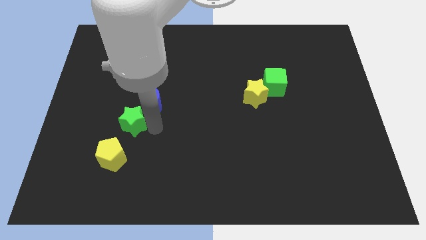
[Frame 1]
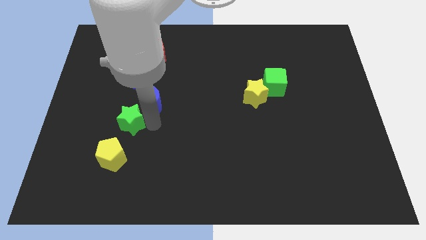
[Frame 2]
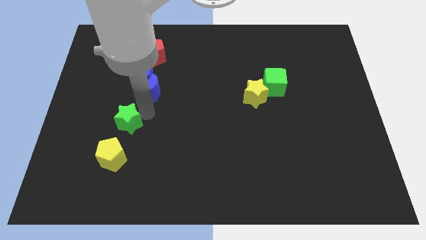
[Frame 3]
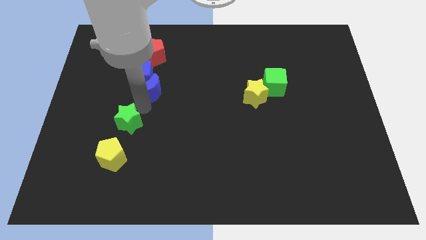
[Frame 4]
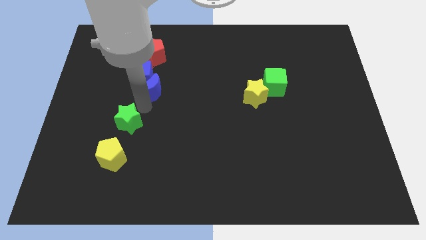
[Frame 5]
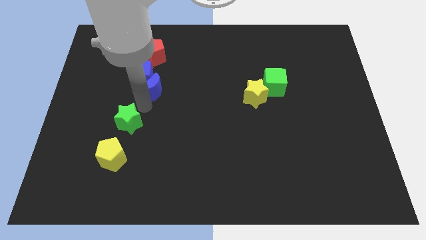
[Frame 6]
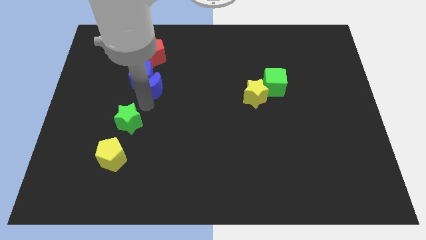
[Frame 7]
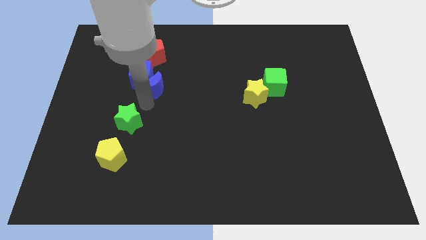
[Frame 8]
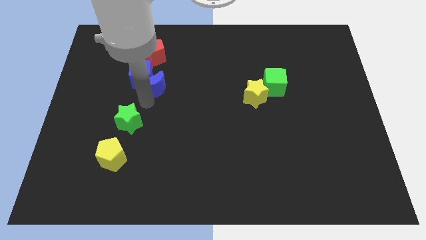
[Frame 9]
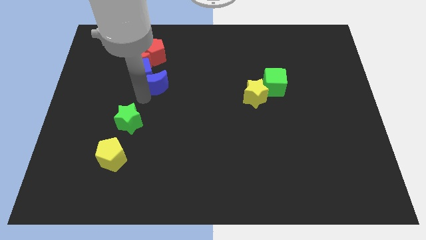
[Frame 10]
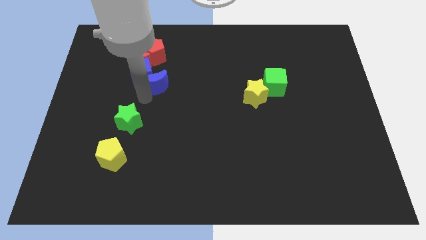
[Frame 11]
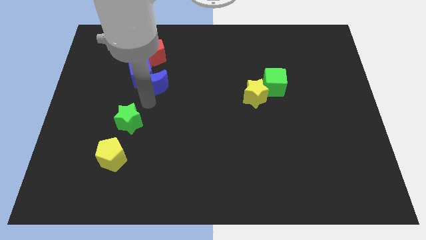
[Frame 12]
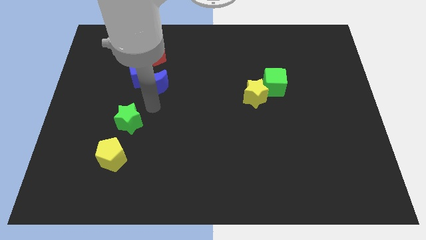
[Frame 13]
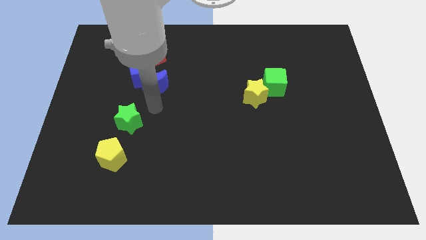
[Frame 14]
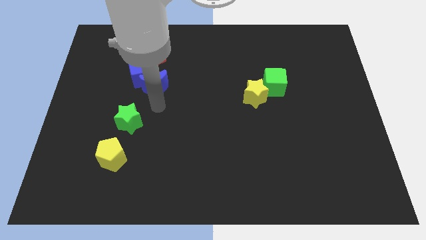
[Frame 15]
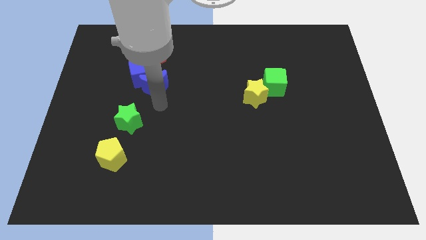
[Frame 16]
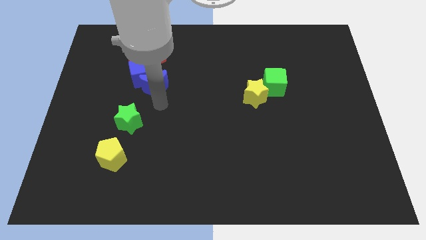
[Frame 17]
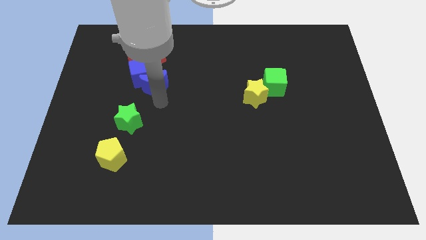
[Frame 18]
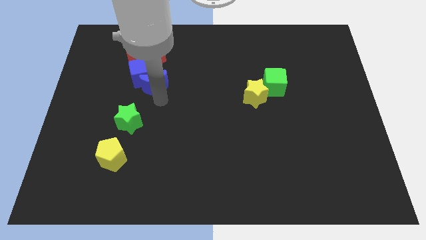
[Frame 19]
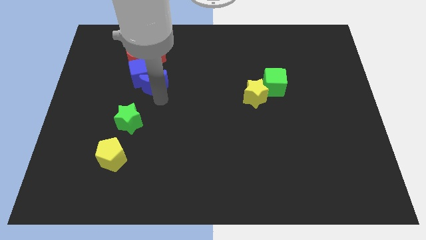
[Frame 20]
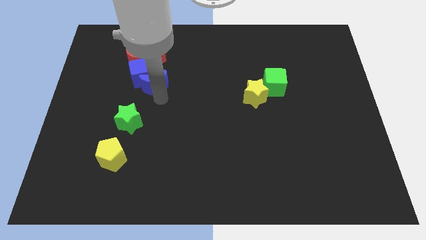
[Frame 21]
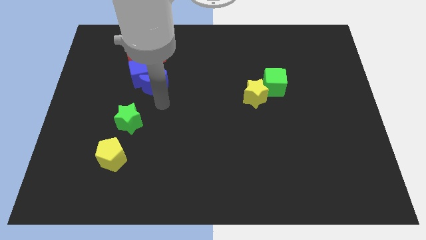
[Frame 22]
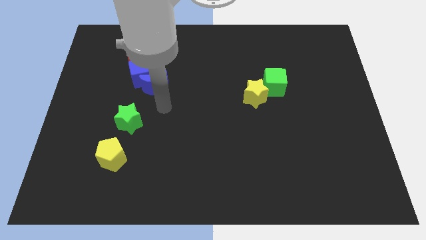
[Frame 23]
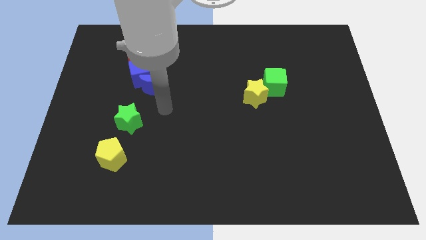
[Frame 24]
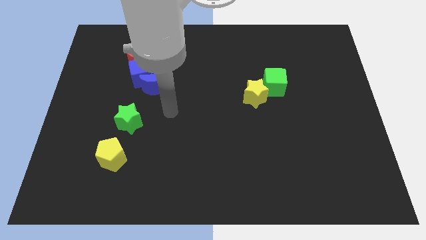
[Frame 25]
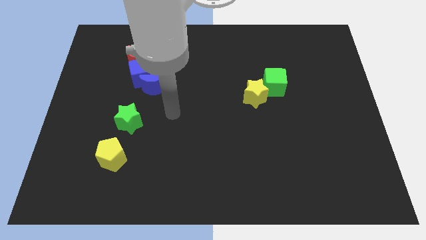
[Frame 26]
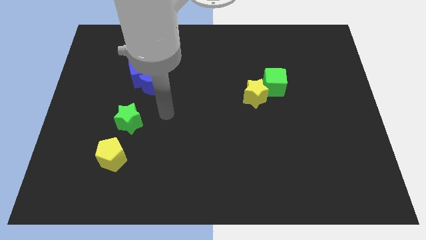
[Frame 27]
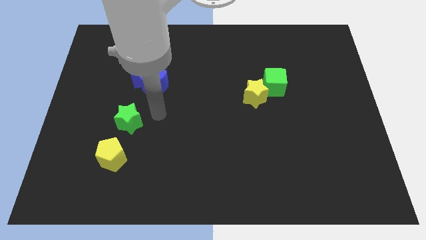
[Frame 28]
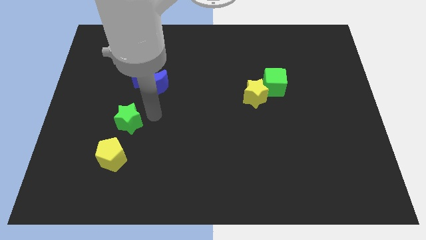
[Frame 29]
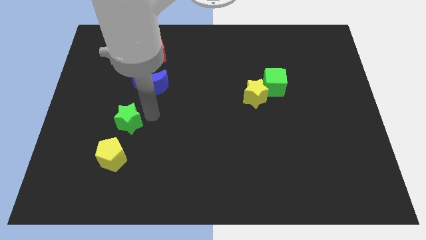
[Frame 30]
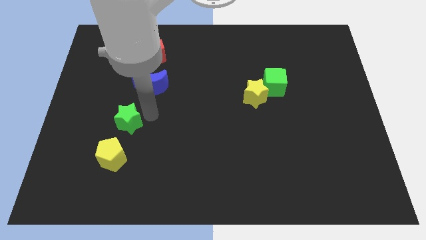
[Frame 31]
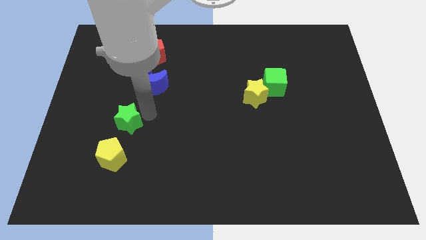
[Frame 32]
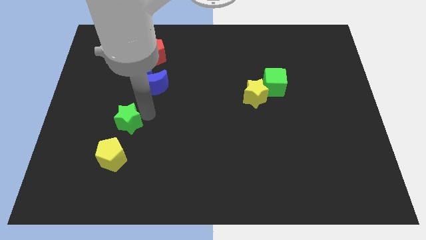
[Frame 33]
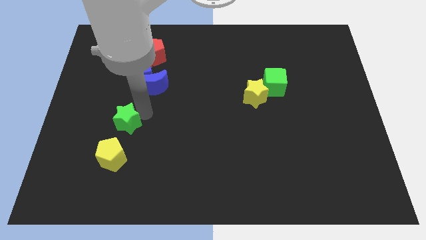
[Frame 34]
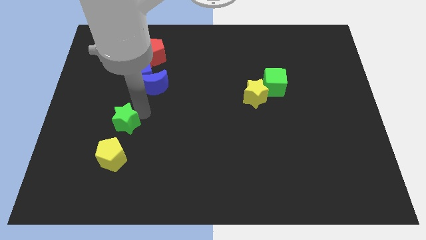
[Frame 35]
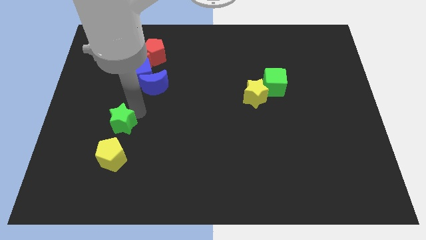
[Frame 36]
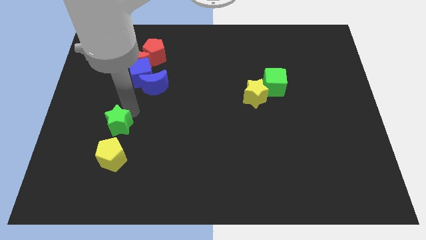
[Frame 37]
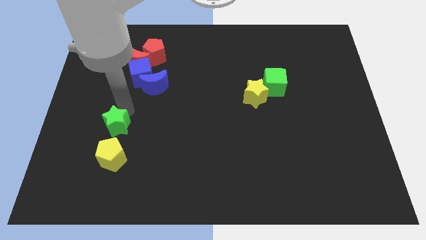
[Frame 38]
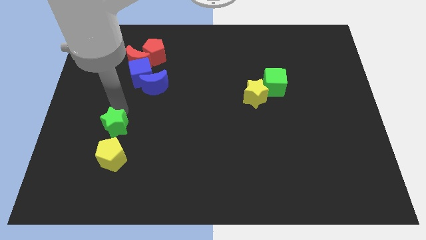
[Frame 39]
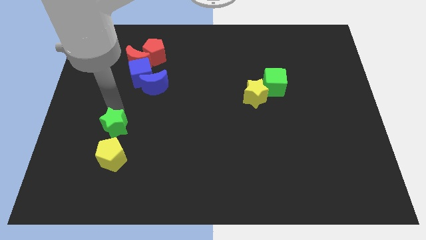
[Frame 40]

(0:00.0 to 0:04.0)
place the green star above the yellow pentagon

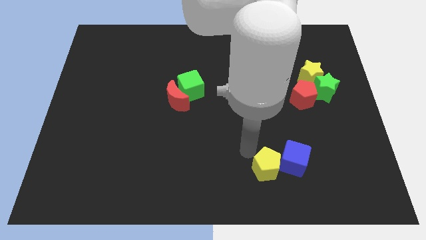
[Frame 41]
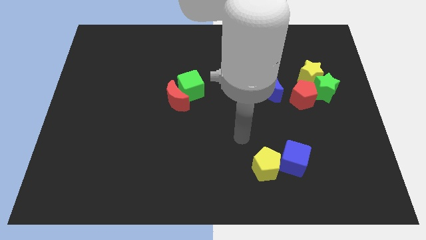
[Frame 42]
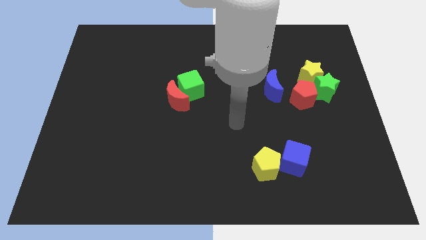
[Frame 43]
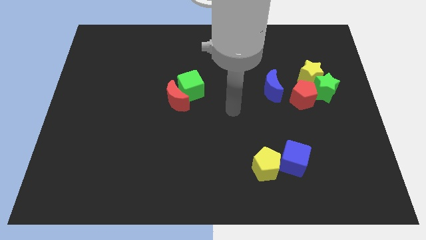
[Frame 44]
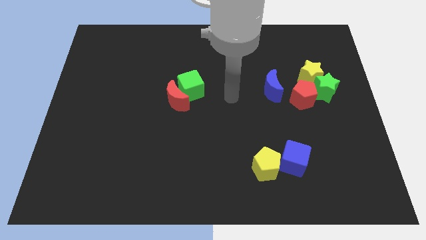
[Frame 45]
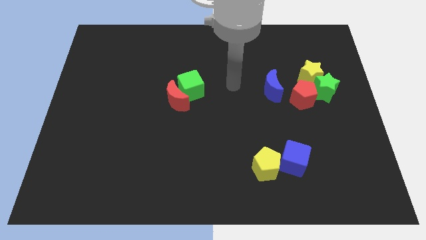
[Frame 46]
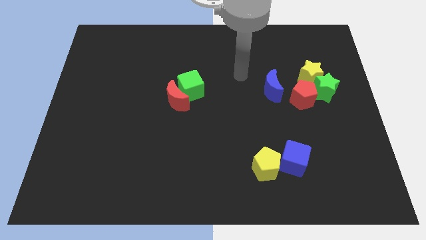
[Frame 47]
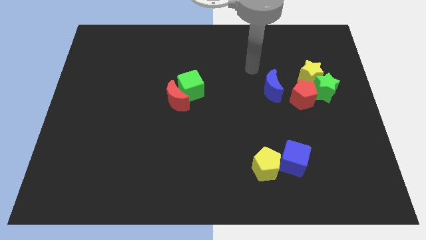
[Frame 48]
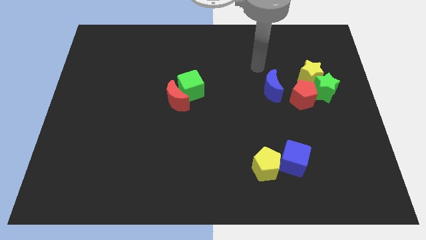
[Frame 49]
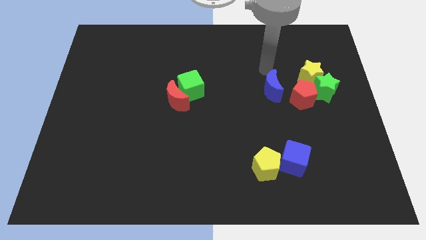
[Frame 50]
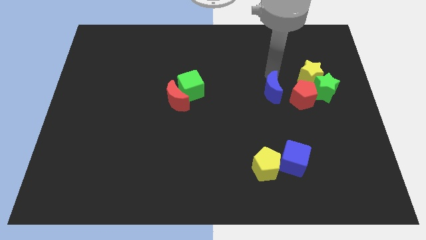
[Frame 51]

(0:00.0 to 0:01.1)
place the arm near the blue moon

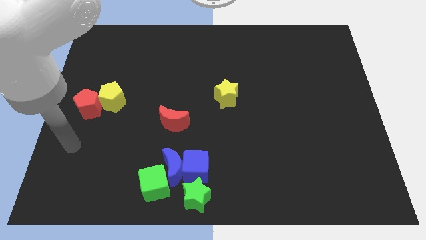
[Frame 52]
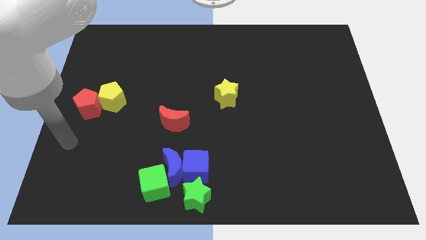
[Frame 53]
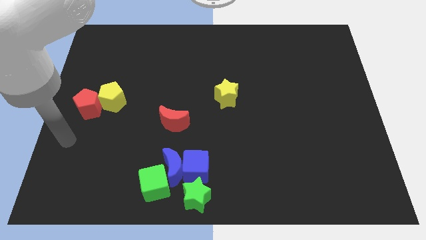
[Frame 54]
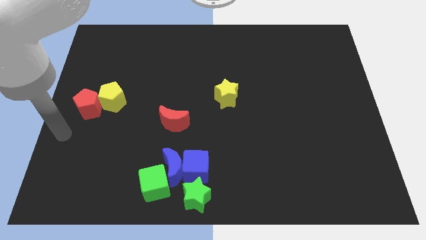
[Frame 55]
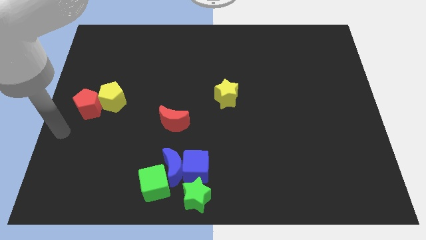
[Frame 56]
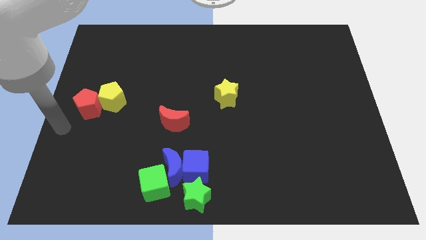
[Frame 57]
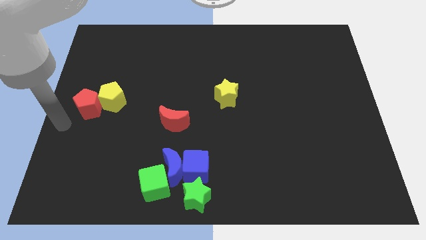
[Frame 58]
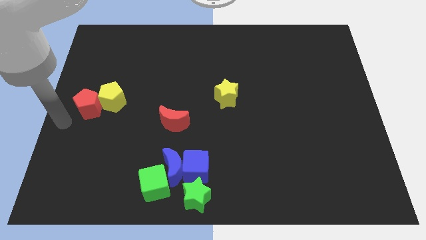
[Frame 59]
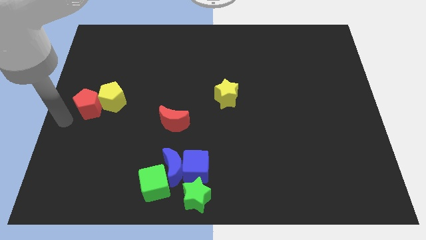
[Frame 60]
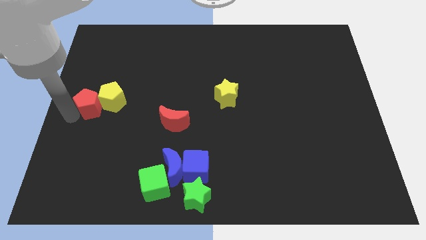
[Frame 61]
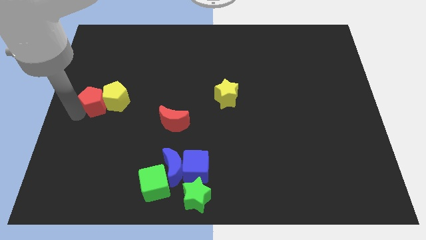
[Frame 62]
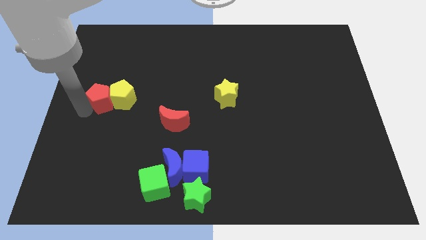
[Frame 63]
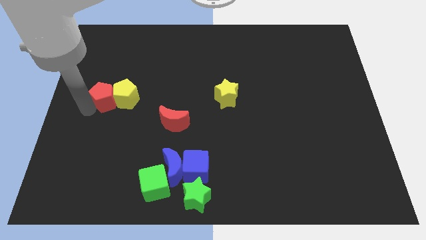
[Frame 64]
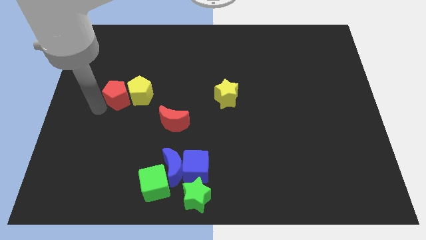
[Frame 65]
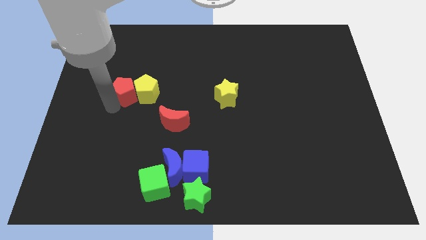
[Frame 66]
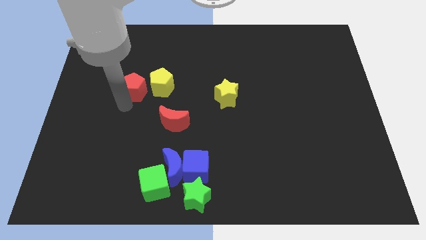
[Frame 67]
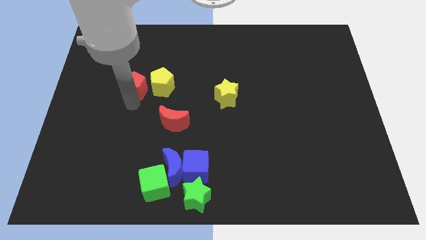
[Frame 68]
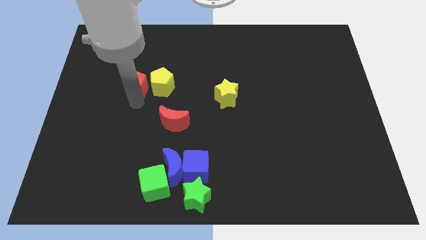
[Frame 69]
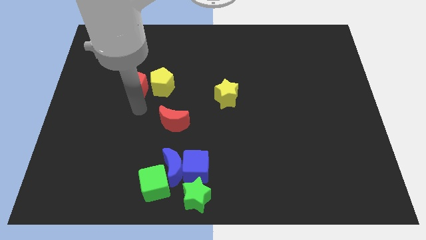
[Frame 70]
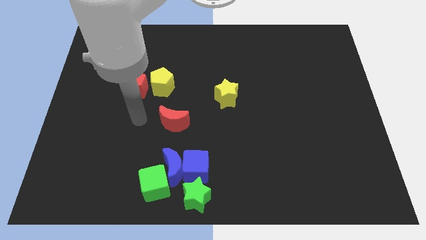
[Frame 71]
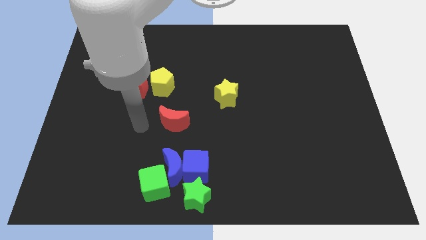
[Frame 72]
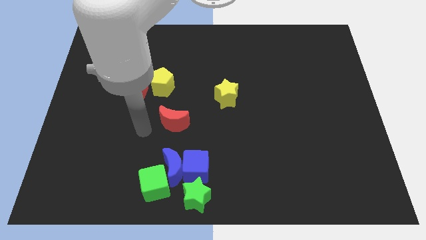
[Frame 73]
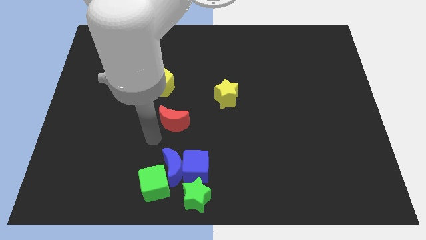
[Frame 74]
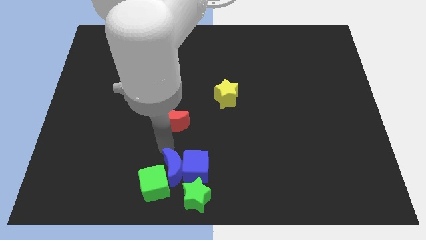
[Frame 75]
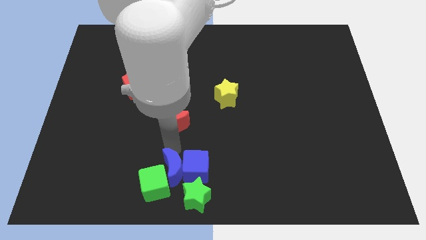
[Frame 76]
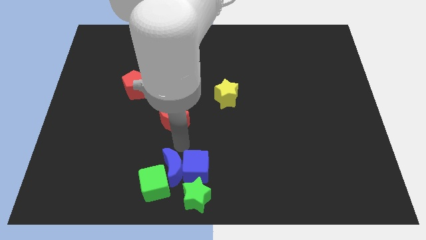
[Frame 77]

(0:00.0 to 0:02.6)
push the red pentagon into the yellow pentagon

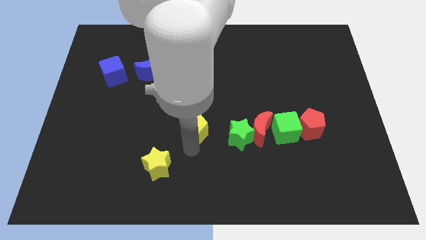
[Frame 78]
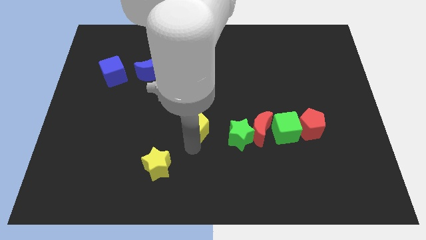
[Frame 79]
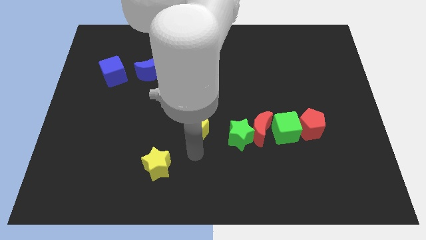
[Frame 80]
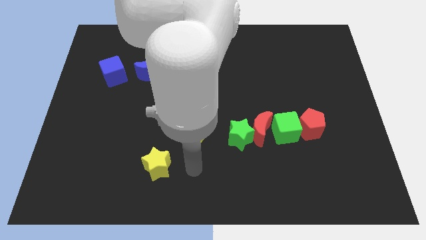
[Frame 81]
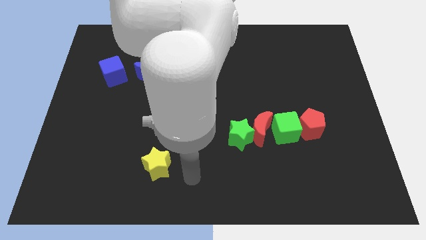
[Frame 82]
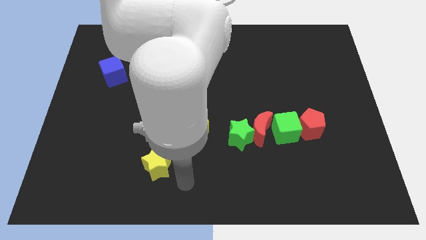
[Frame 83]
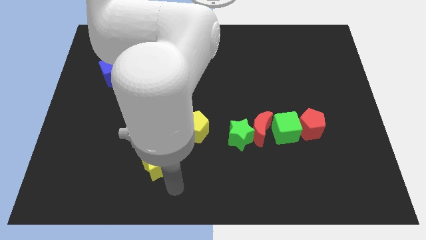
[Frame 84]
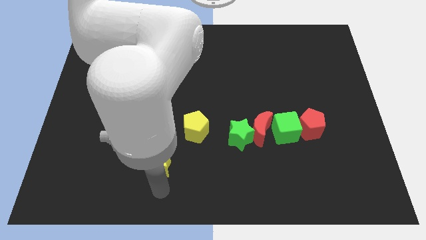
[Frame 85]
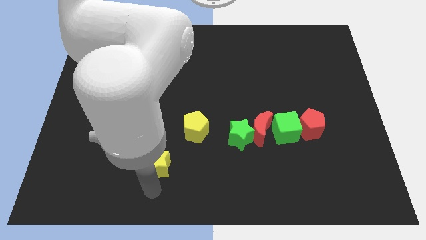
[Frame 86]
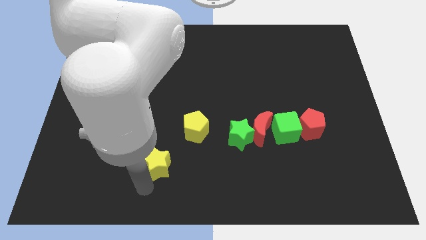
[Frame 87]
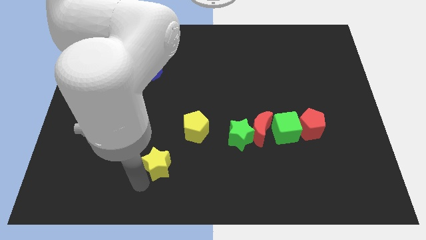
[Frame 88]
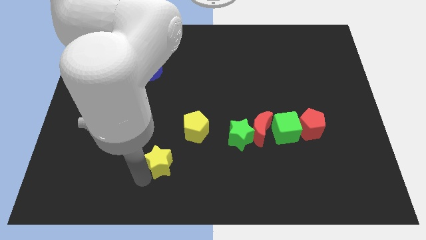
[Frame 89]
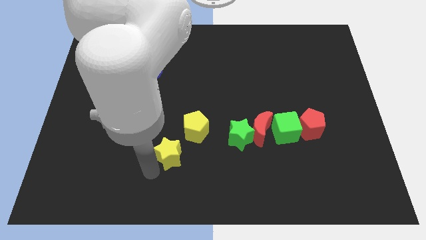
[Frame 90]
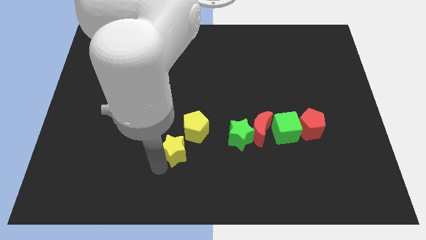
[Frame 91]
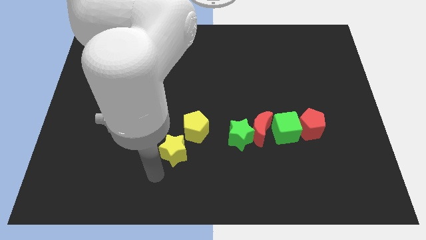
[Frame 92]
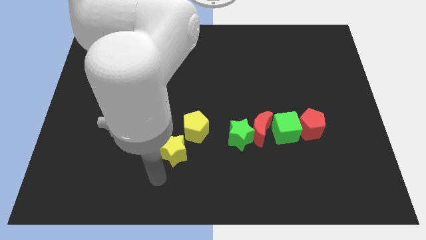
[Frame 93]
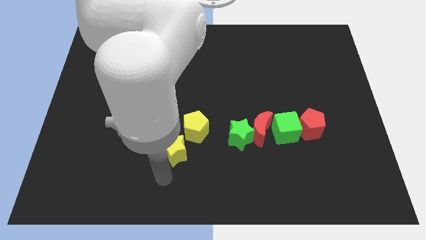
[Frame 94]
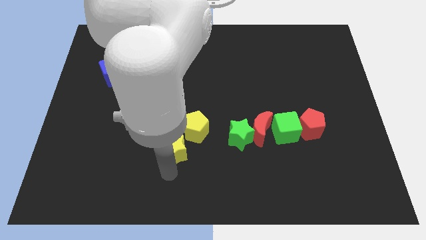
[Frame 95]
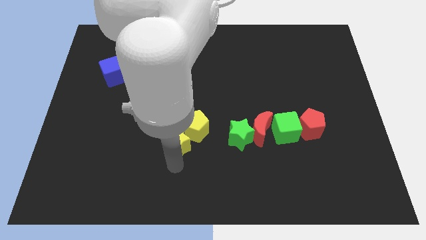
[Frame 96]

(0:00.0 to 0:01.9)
drag the yellow star into the yellow pentagon
